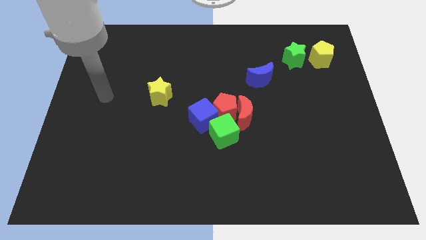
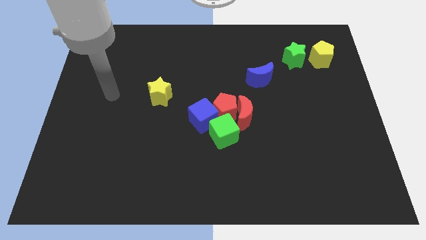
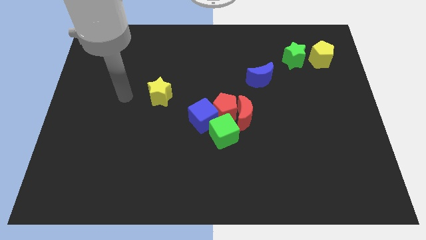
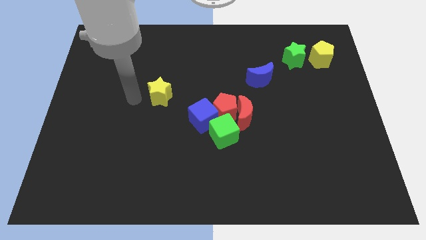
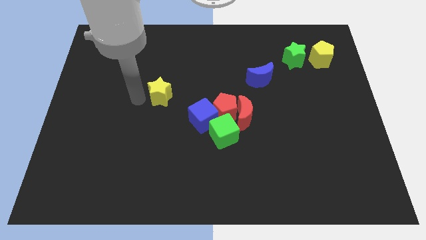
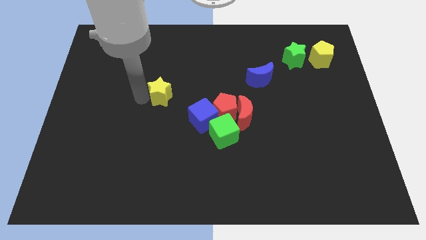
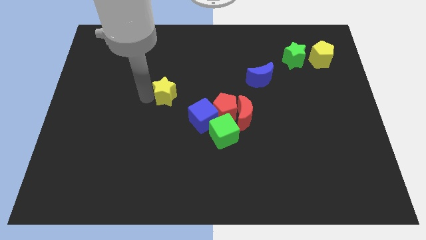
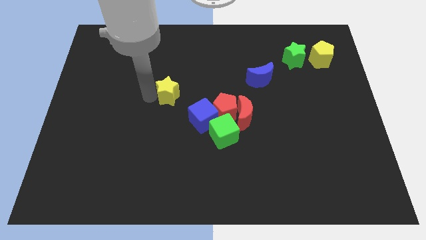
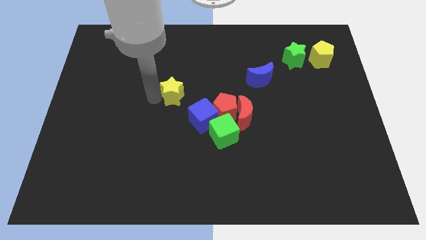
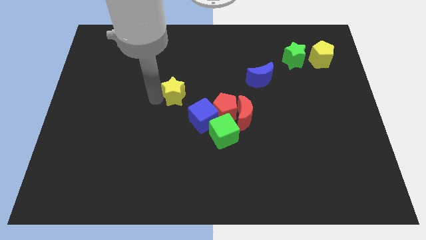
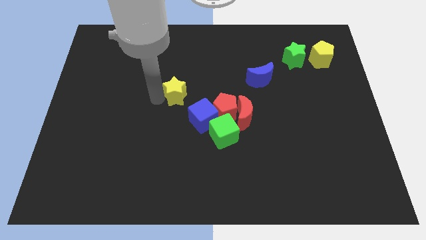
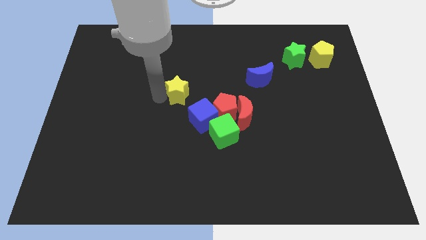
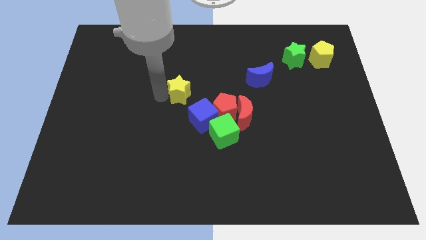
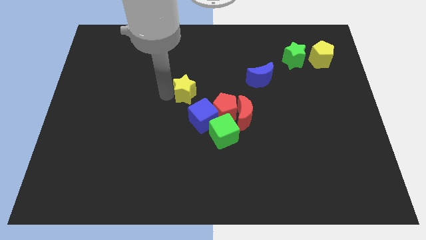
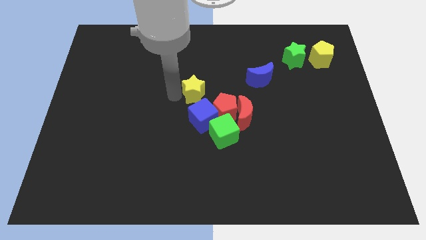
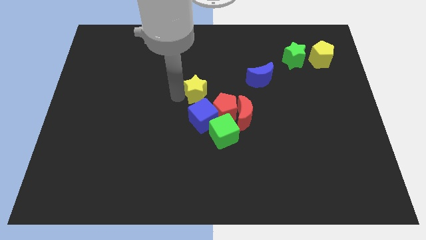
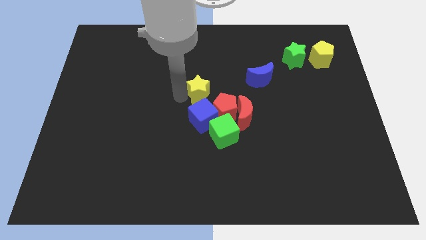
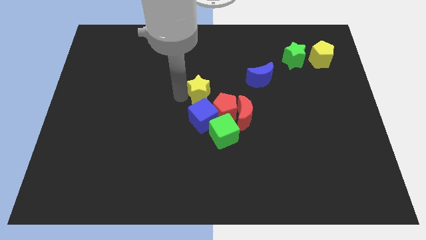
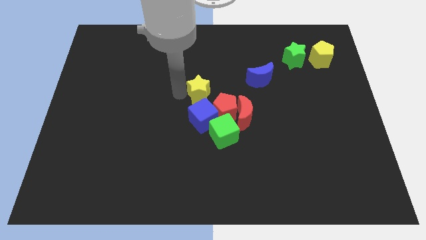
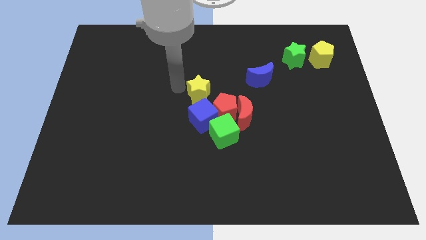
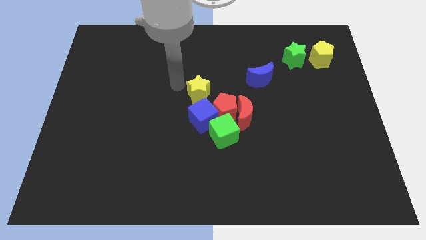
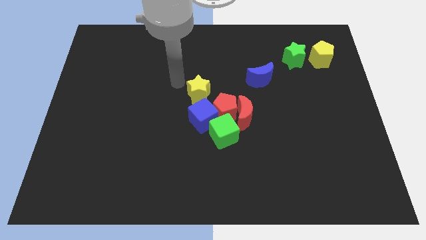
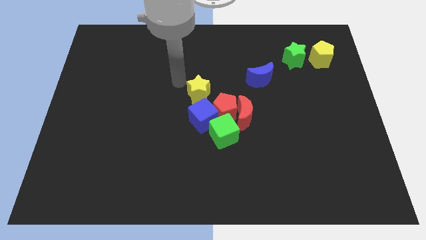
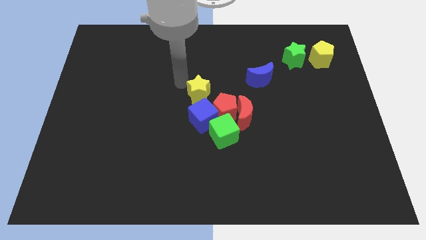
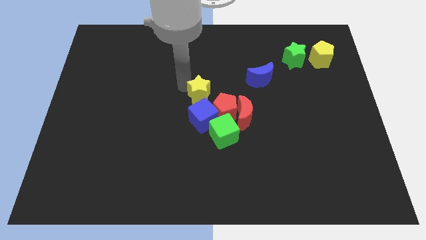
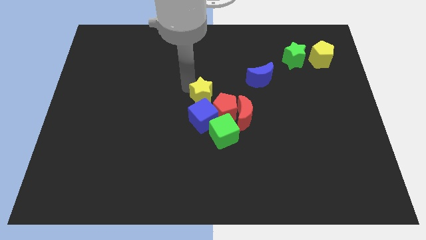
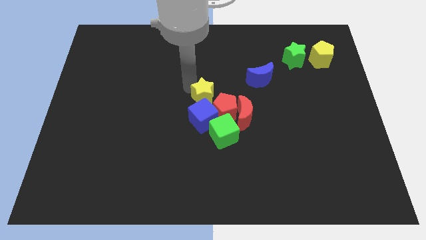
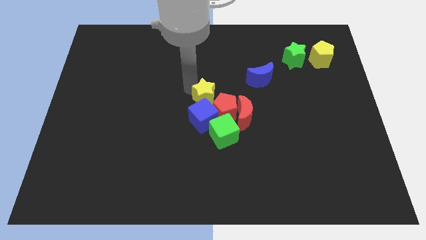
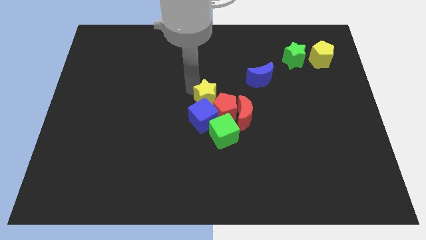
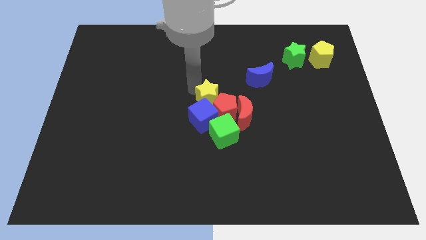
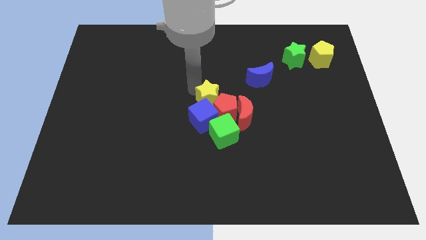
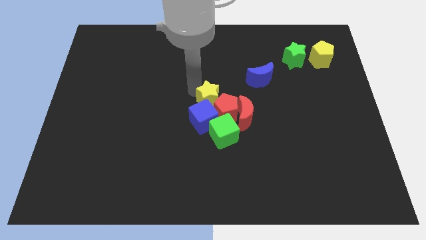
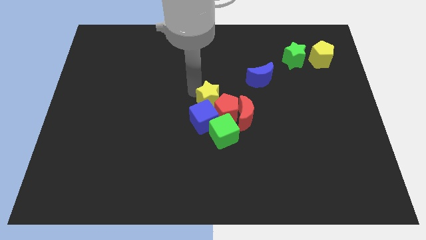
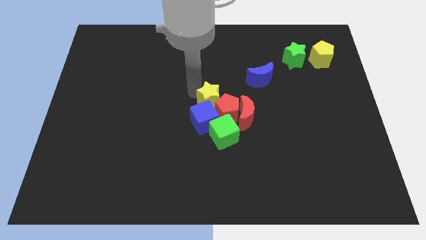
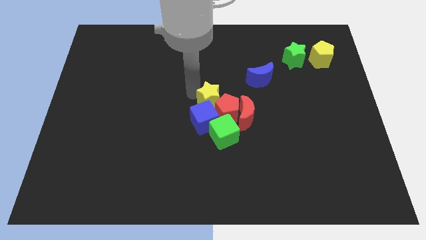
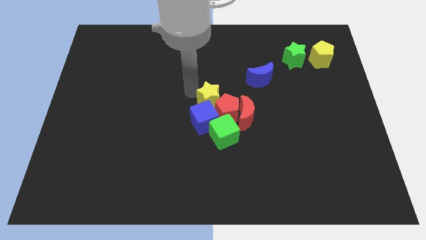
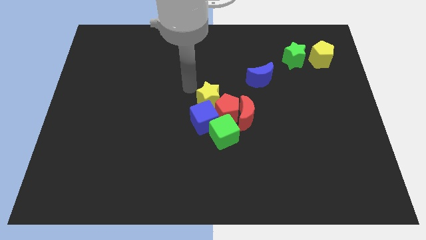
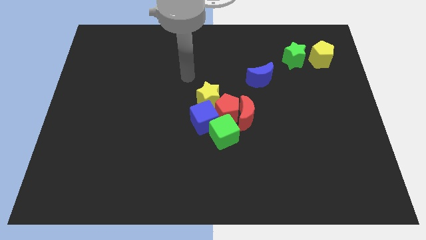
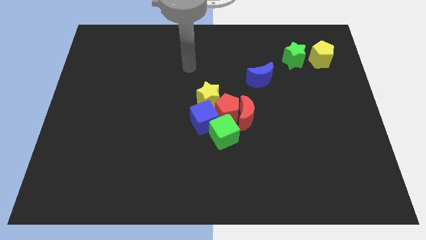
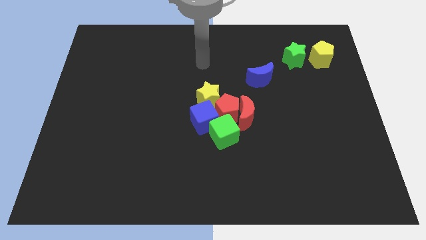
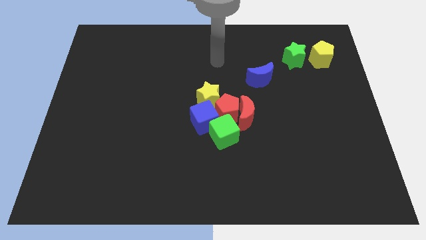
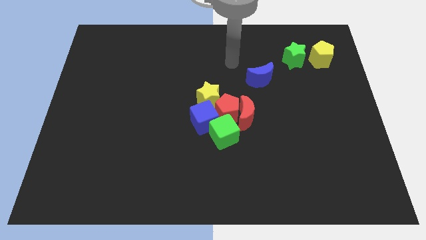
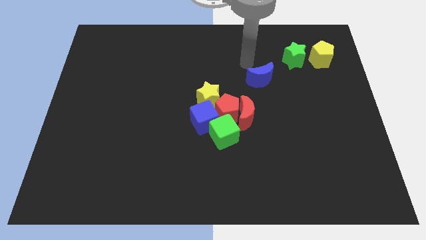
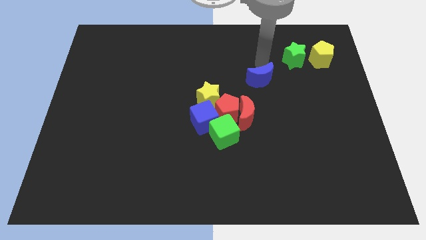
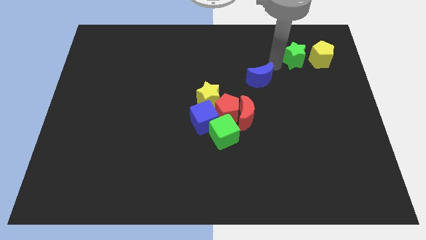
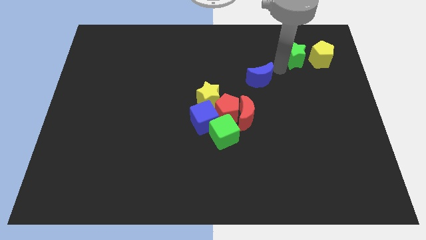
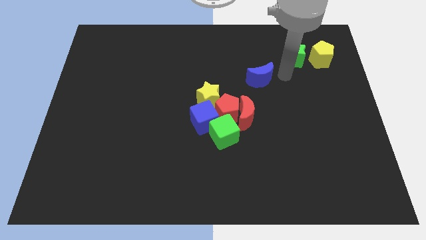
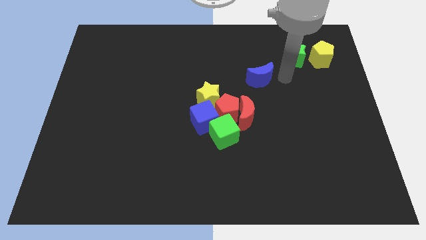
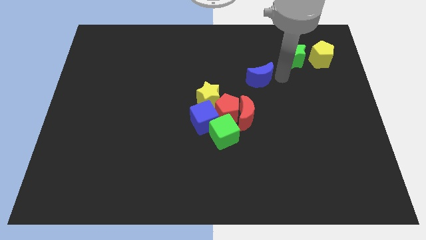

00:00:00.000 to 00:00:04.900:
push the yellow star into the red pentagon blue cube

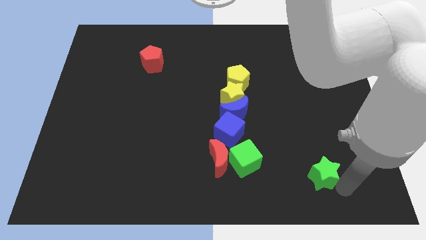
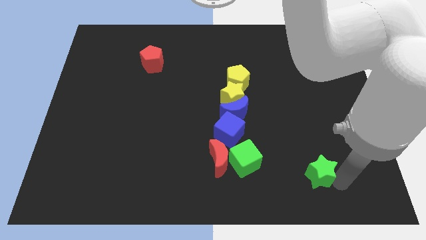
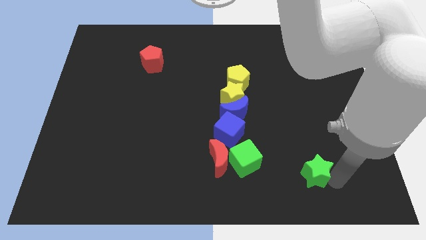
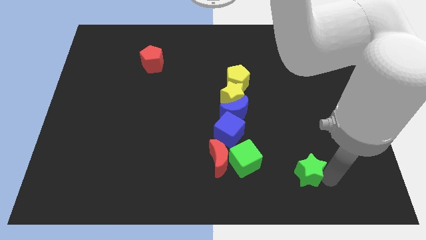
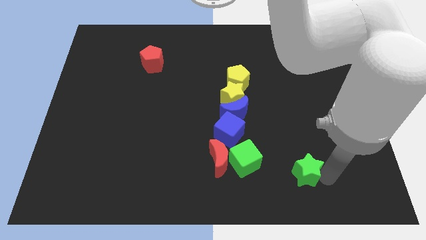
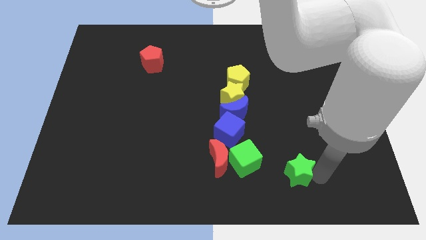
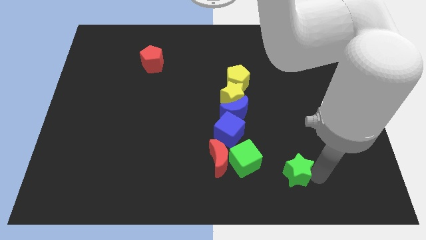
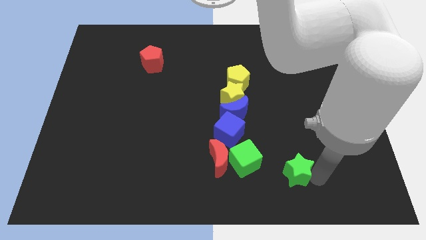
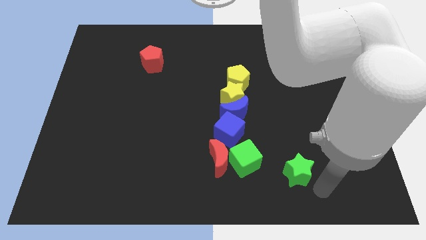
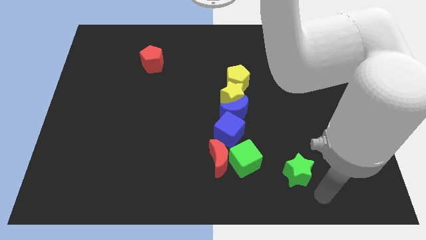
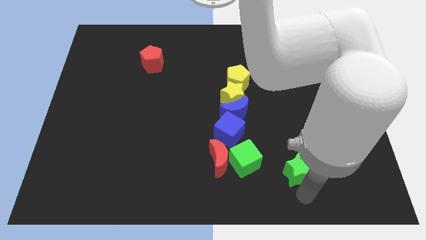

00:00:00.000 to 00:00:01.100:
move green star towards green cube

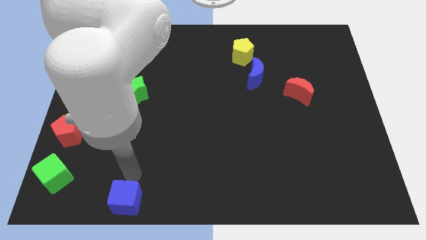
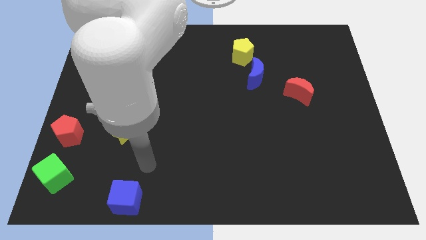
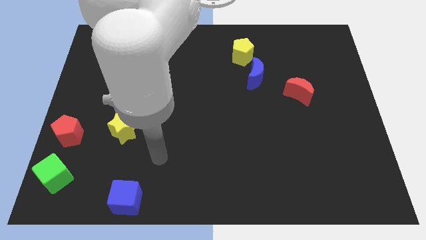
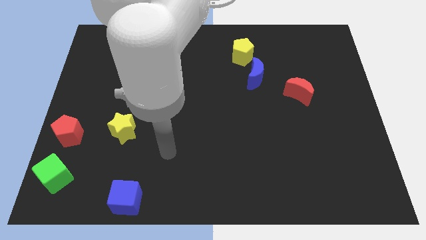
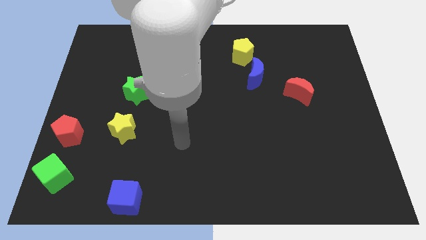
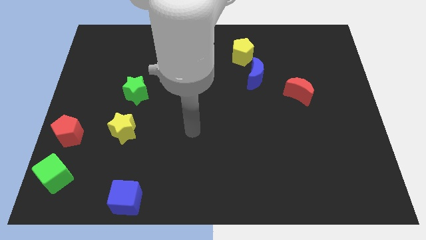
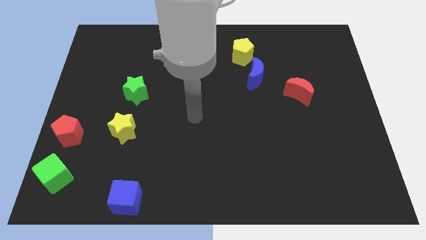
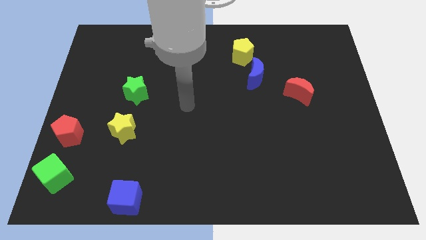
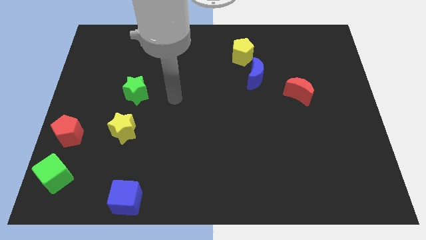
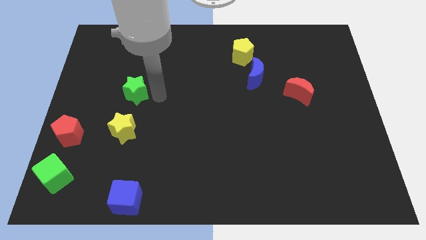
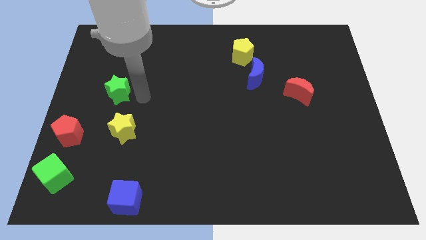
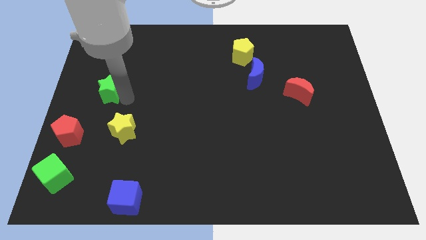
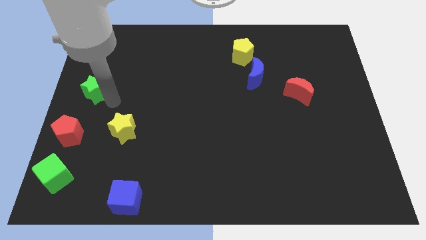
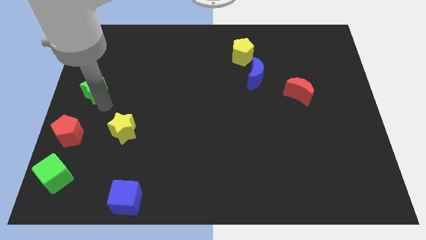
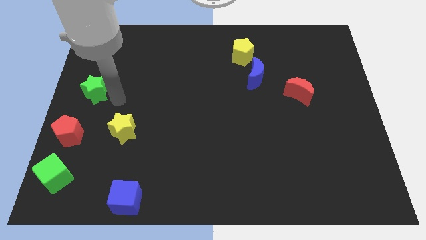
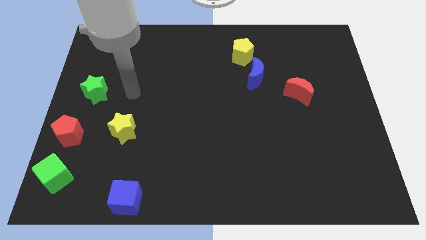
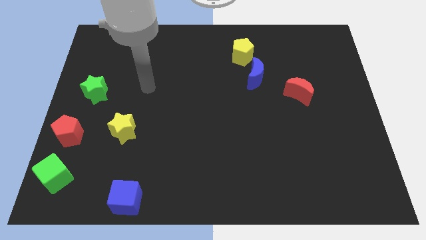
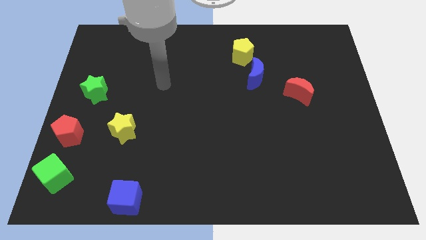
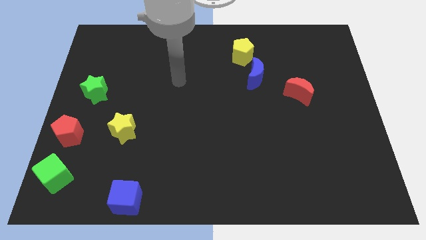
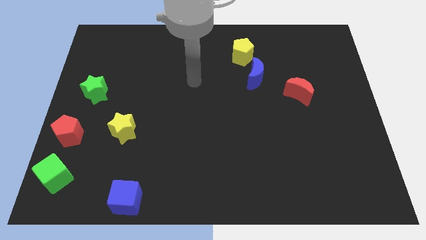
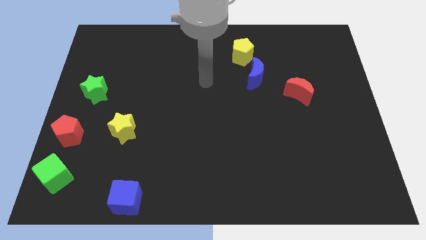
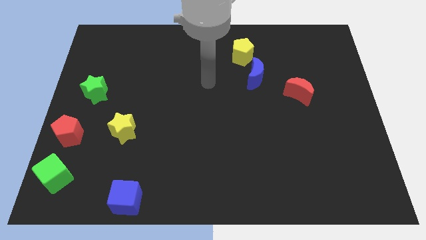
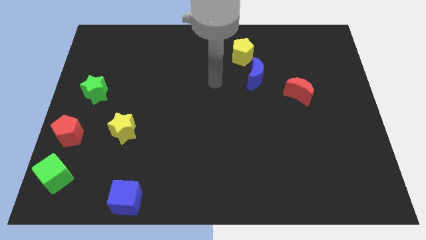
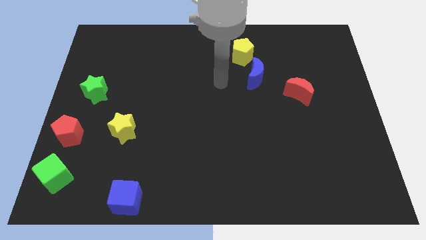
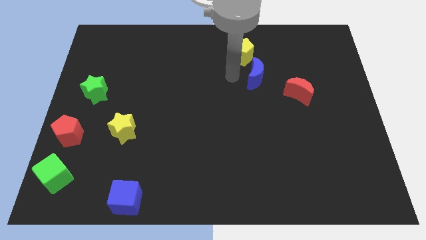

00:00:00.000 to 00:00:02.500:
push the green star to the left of the board

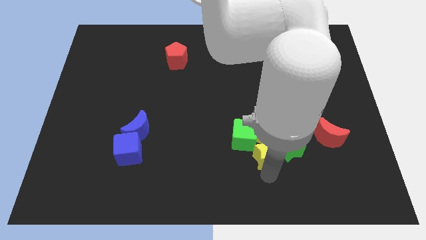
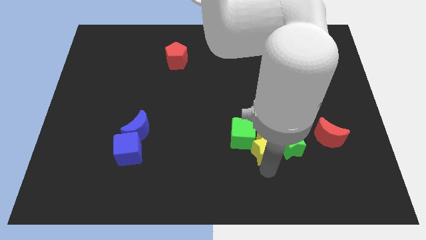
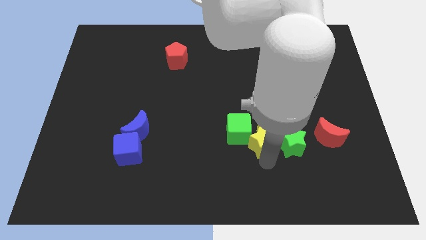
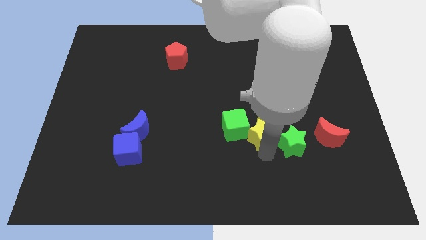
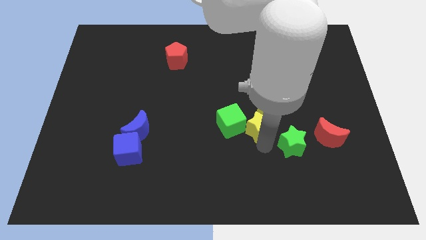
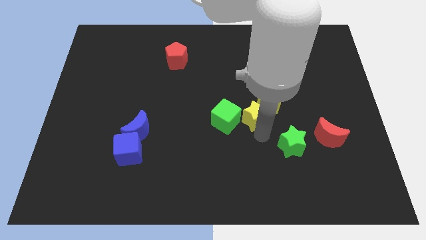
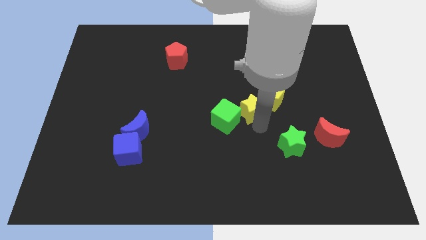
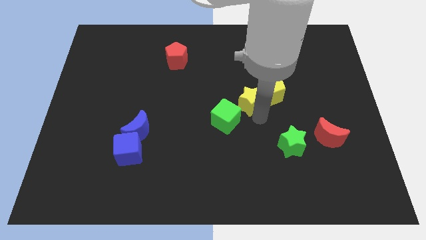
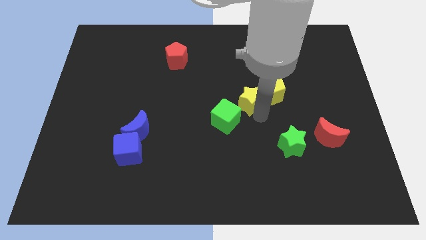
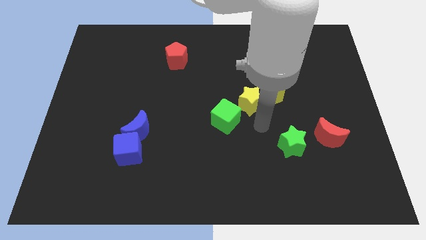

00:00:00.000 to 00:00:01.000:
move the yellow star in between the yellow pentagon and green cube
